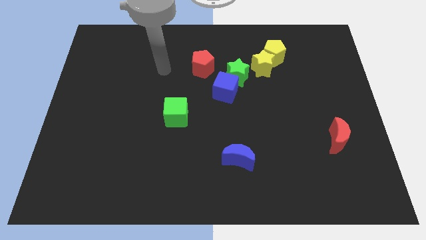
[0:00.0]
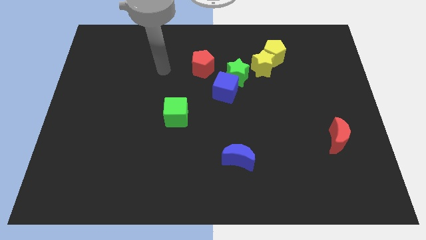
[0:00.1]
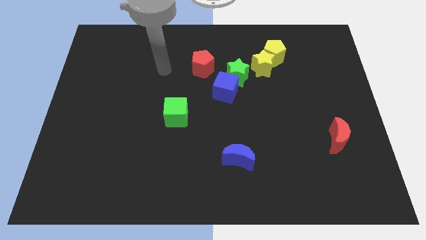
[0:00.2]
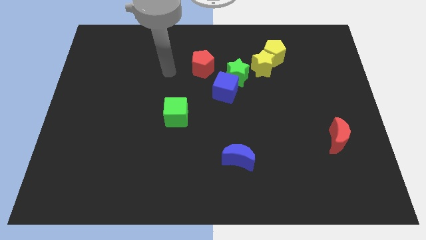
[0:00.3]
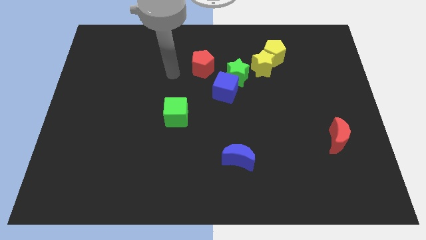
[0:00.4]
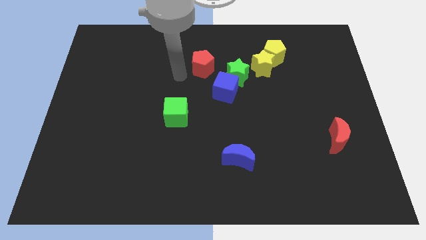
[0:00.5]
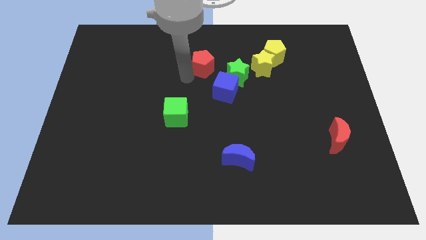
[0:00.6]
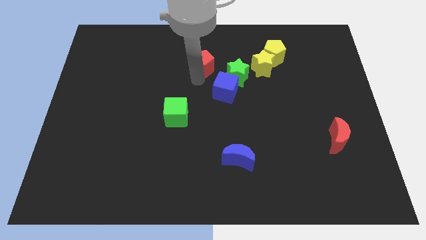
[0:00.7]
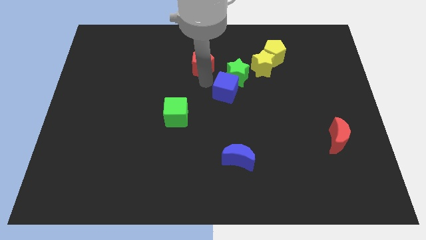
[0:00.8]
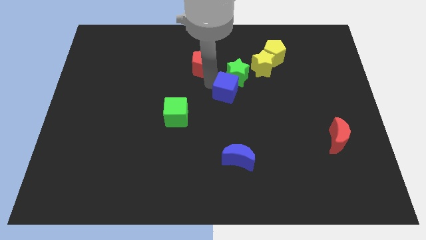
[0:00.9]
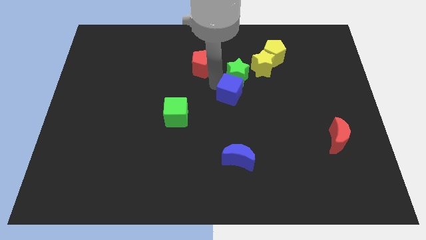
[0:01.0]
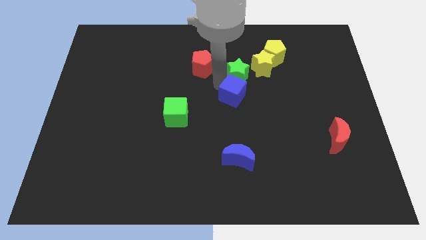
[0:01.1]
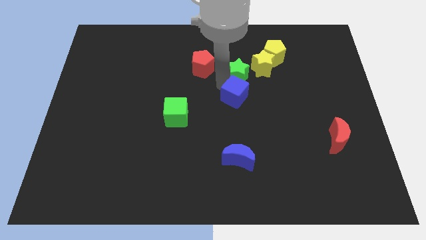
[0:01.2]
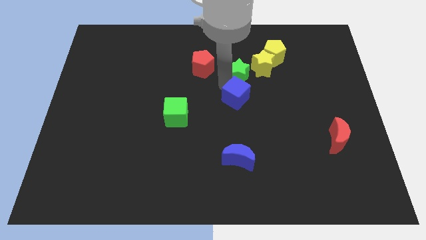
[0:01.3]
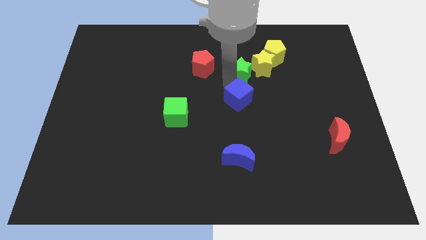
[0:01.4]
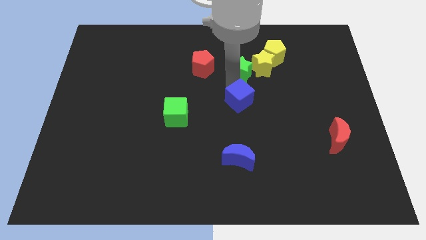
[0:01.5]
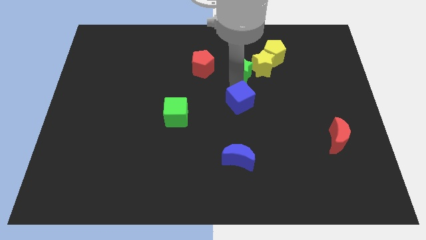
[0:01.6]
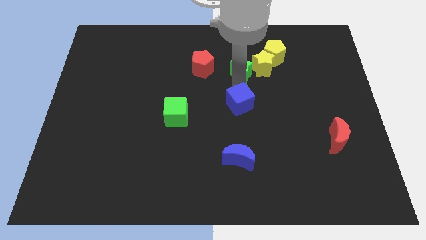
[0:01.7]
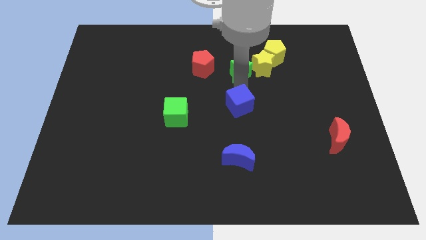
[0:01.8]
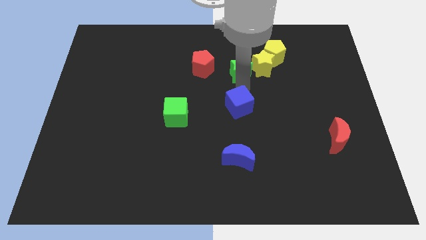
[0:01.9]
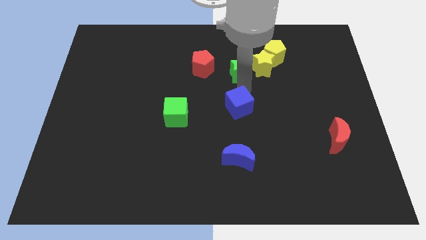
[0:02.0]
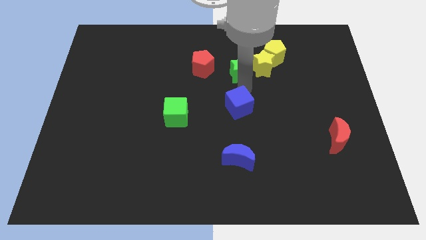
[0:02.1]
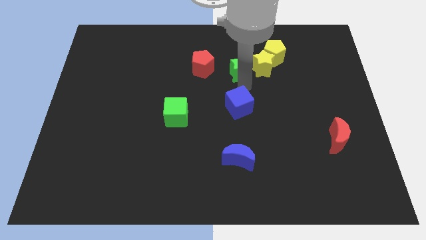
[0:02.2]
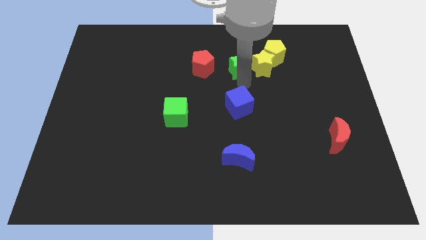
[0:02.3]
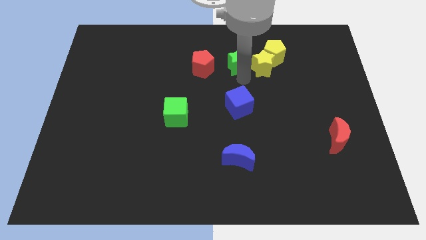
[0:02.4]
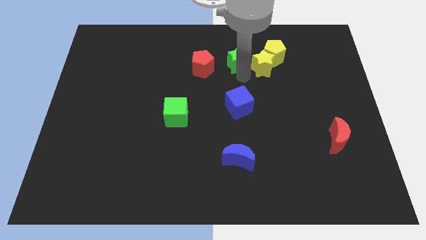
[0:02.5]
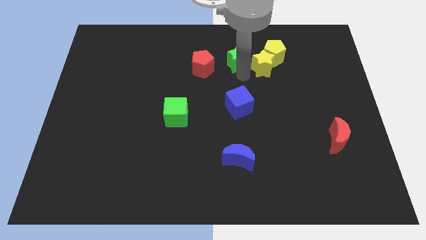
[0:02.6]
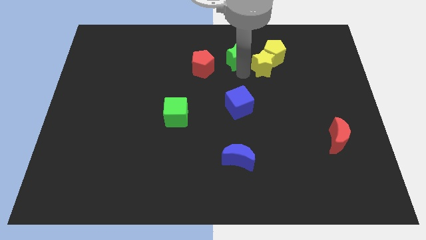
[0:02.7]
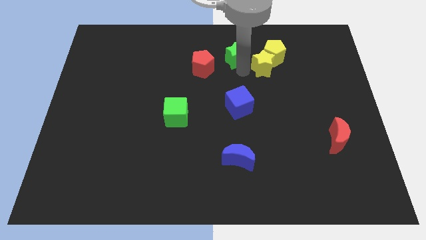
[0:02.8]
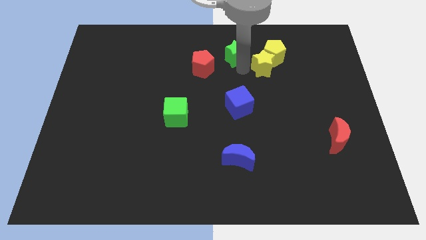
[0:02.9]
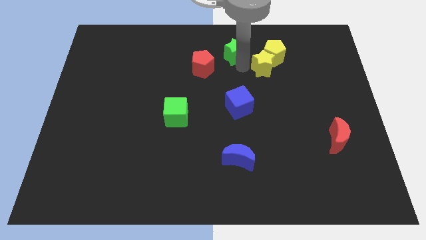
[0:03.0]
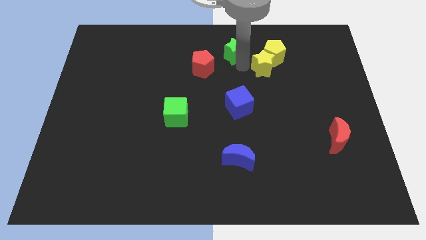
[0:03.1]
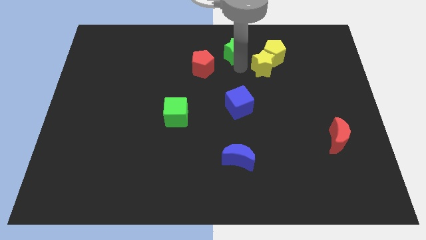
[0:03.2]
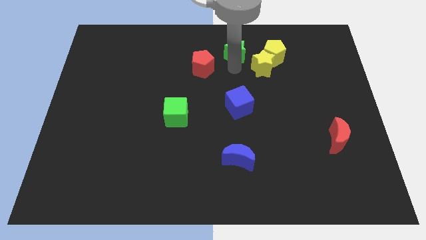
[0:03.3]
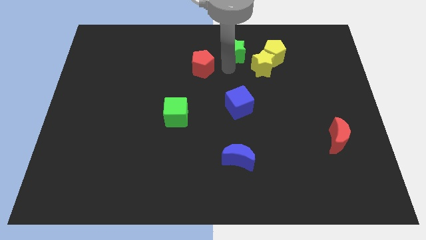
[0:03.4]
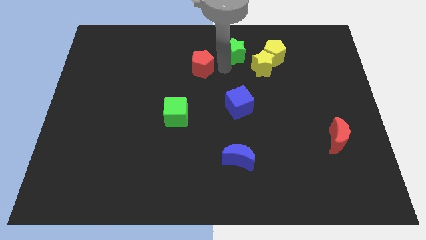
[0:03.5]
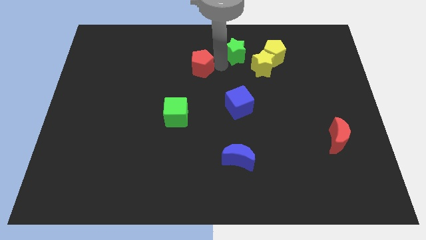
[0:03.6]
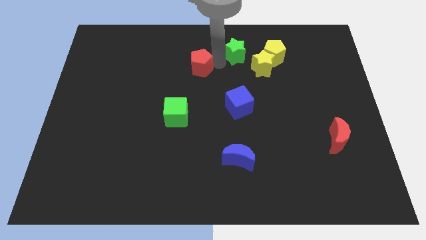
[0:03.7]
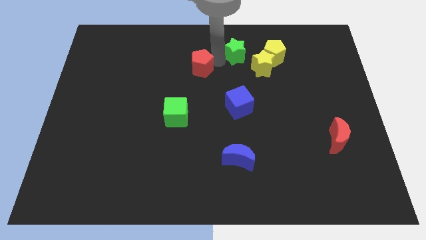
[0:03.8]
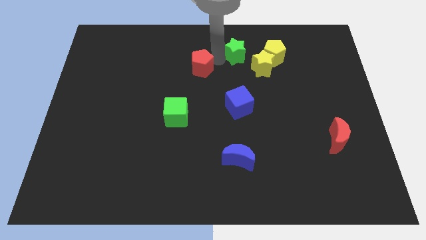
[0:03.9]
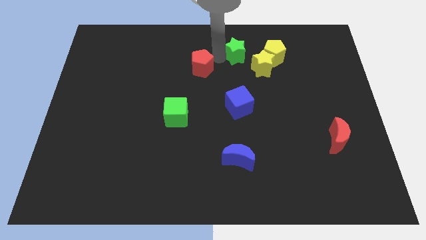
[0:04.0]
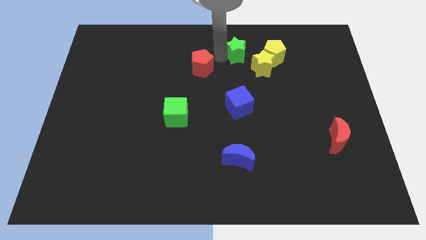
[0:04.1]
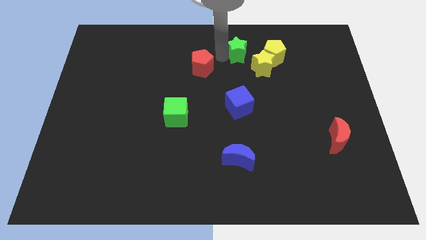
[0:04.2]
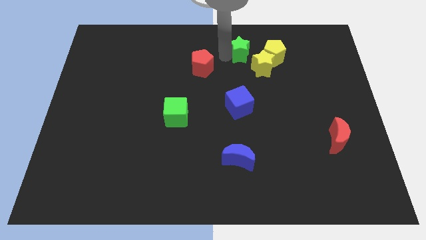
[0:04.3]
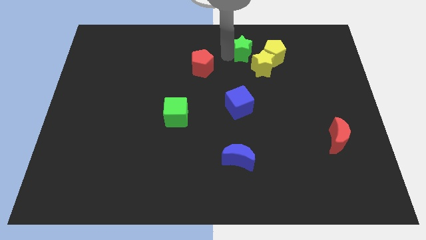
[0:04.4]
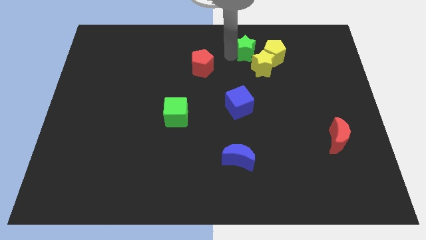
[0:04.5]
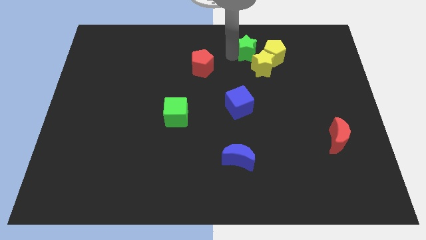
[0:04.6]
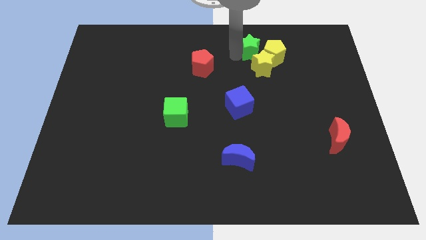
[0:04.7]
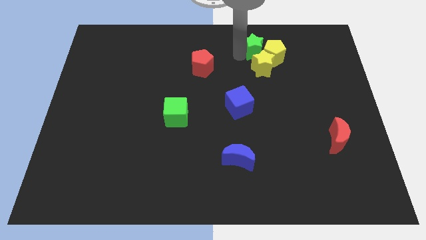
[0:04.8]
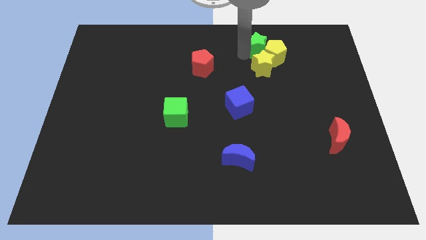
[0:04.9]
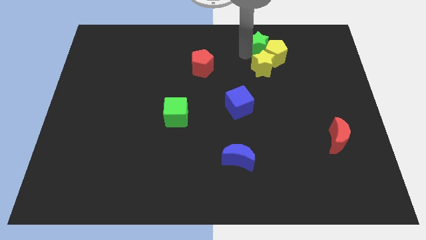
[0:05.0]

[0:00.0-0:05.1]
move the green star next to the yellow pentagon

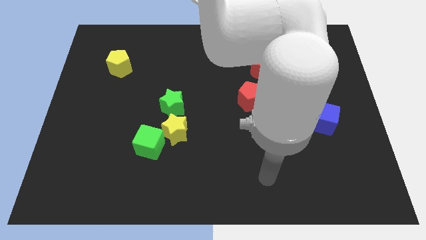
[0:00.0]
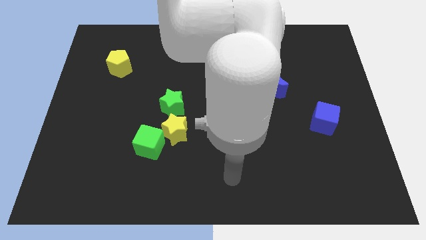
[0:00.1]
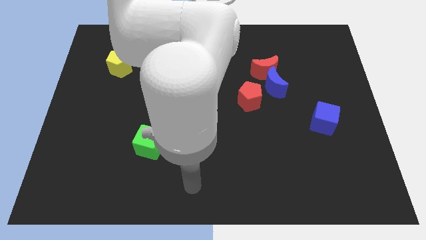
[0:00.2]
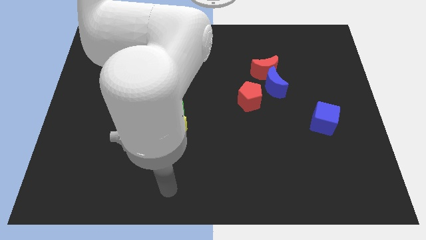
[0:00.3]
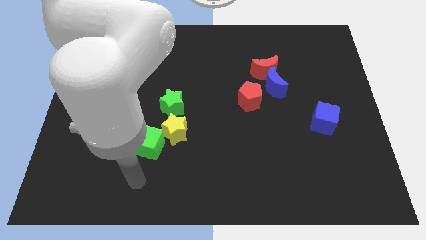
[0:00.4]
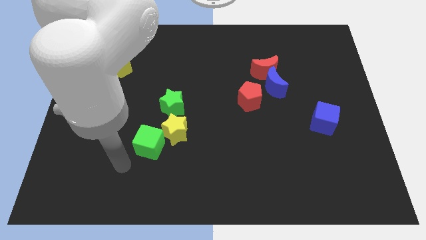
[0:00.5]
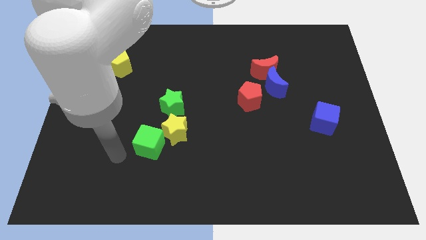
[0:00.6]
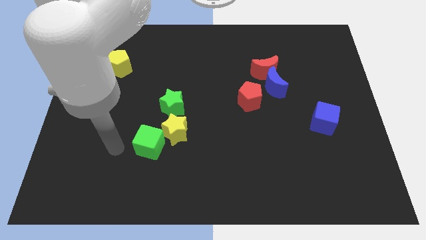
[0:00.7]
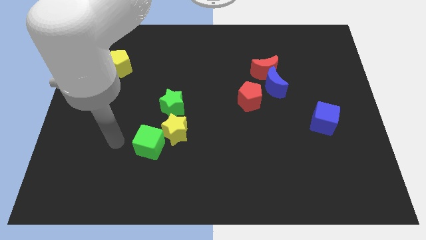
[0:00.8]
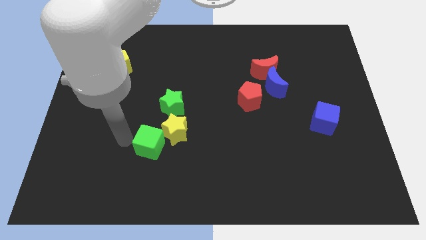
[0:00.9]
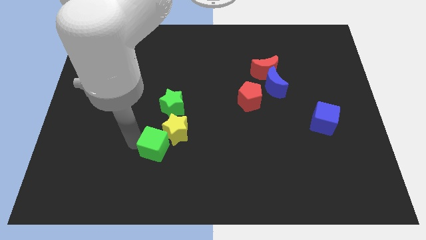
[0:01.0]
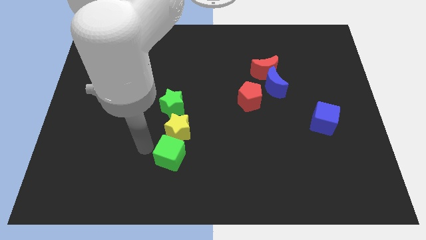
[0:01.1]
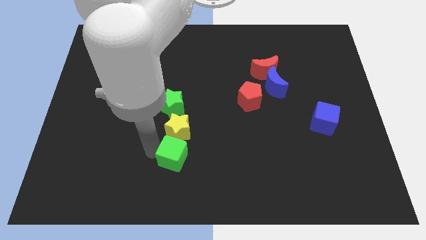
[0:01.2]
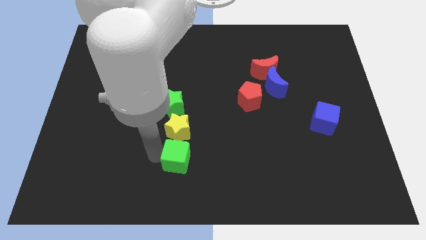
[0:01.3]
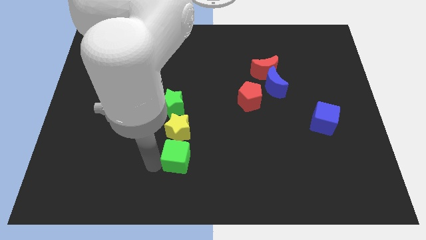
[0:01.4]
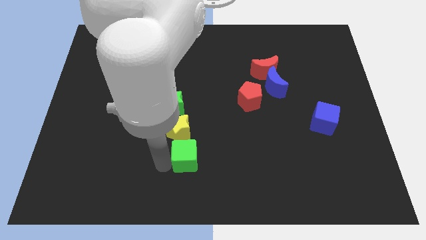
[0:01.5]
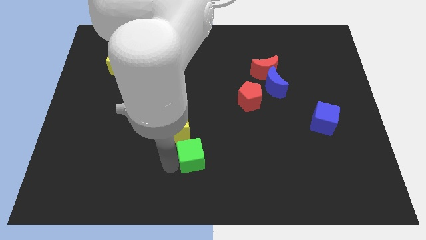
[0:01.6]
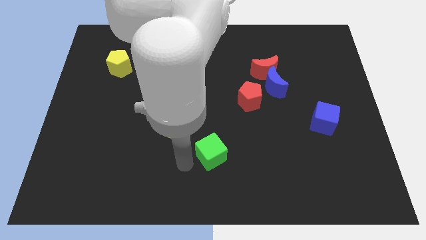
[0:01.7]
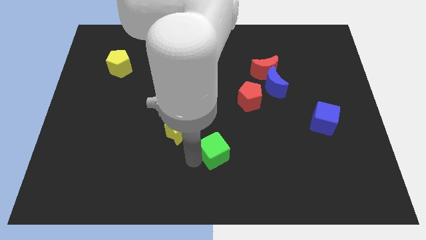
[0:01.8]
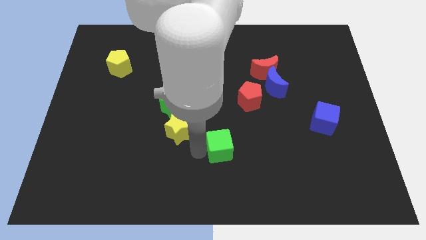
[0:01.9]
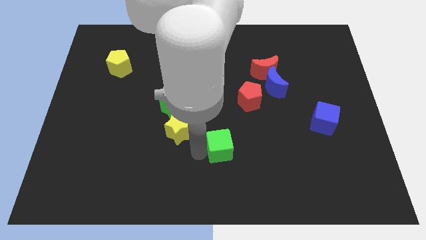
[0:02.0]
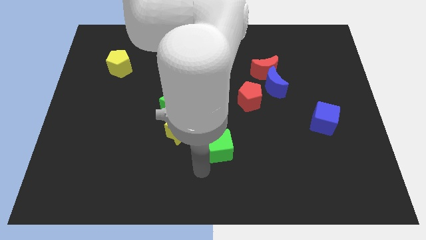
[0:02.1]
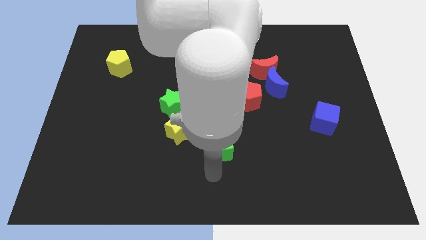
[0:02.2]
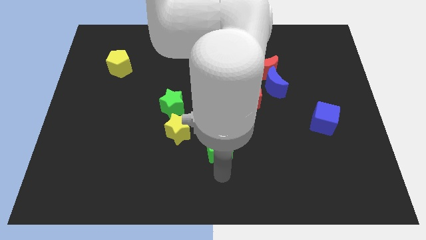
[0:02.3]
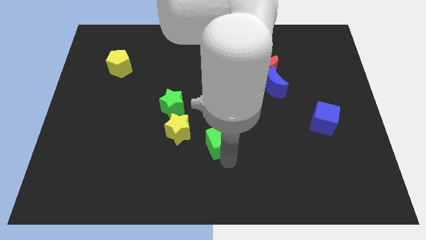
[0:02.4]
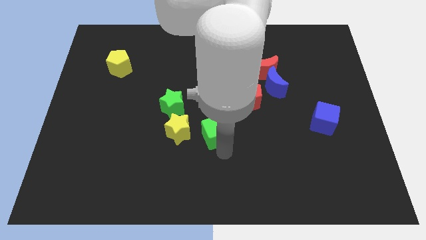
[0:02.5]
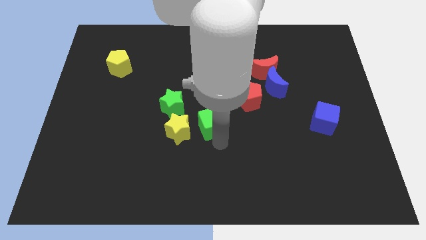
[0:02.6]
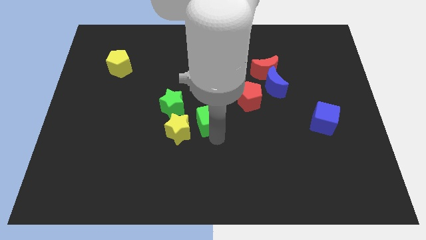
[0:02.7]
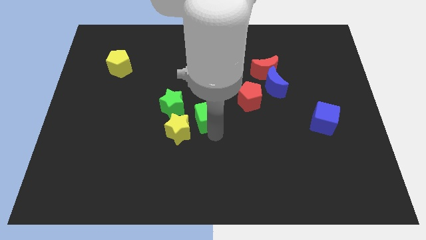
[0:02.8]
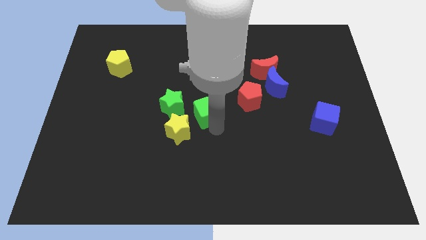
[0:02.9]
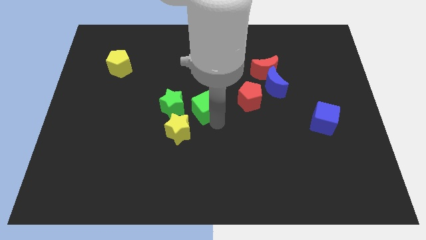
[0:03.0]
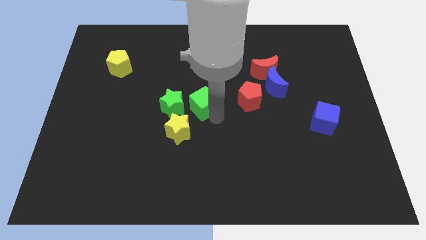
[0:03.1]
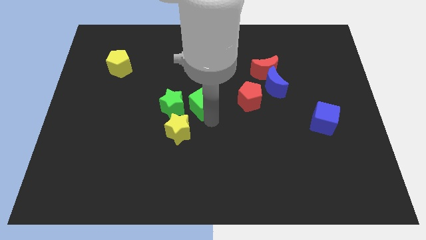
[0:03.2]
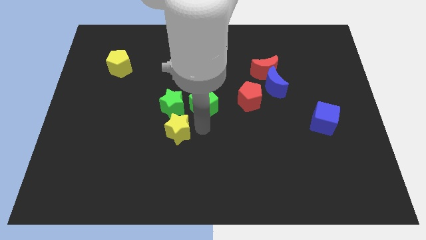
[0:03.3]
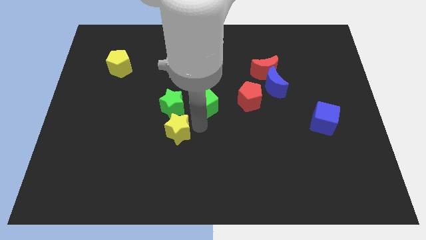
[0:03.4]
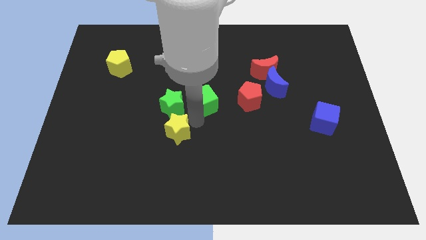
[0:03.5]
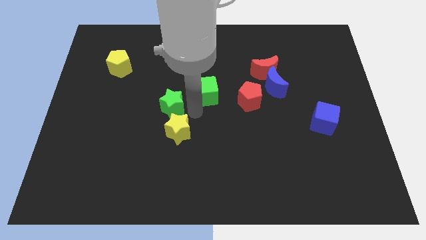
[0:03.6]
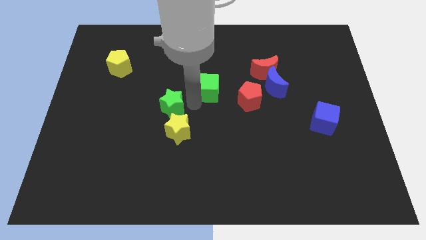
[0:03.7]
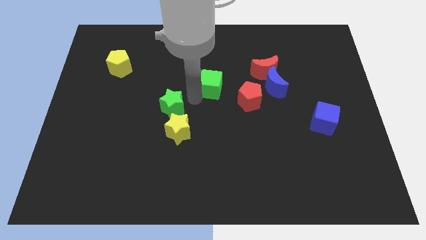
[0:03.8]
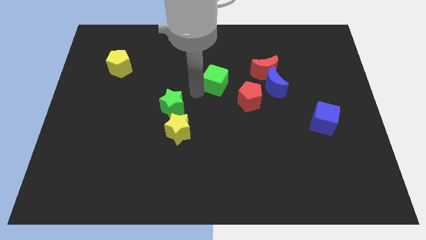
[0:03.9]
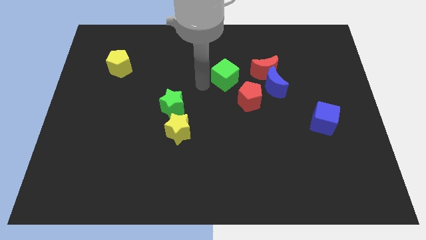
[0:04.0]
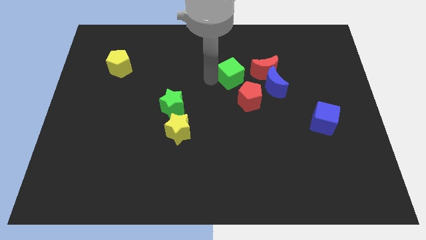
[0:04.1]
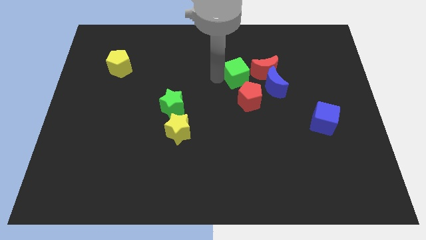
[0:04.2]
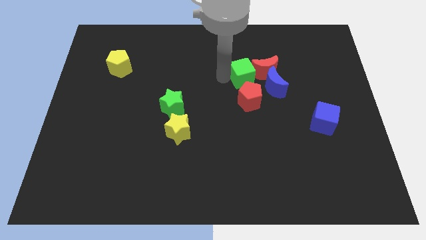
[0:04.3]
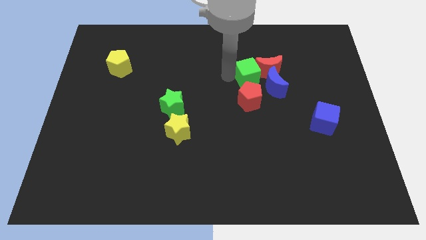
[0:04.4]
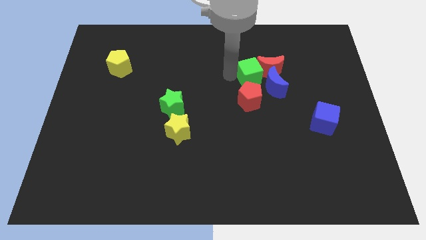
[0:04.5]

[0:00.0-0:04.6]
move the green cube close to the red moon
